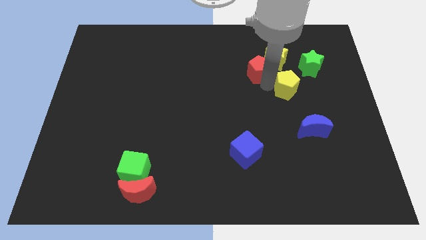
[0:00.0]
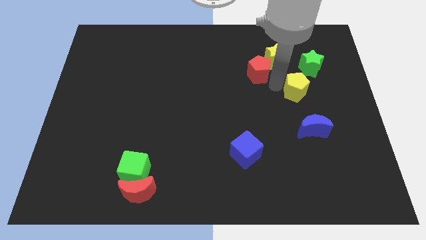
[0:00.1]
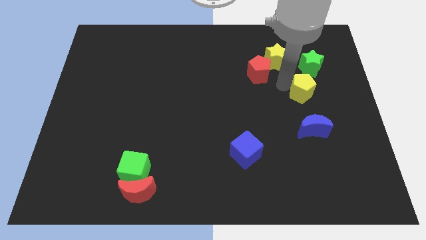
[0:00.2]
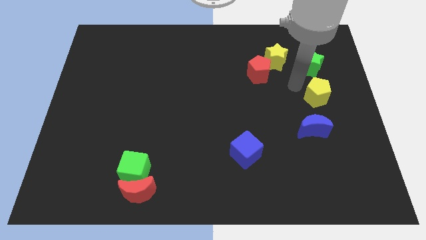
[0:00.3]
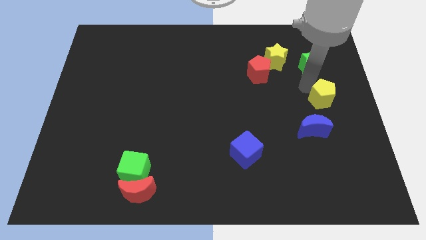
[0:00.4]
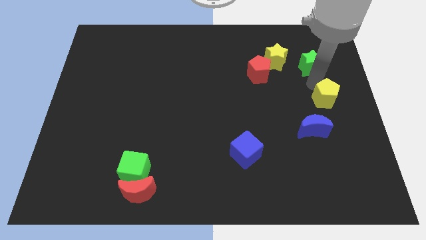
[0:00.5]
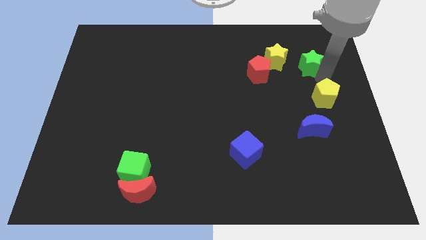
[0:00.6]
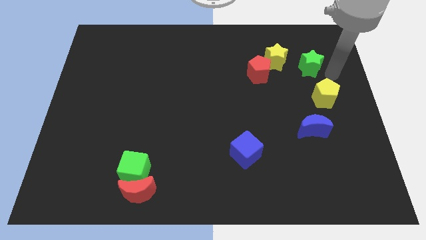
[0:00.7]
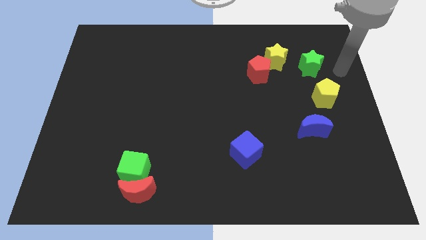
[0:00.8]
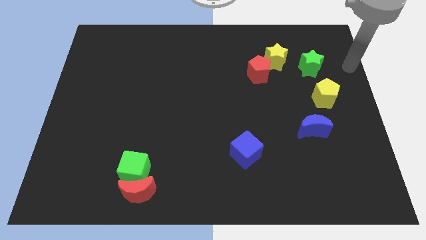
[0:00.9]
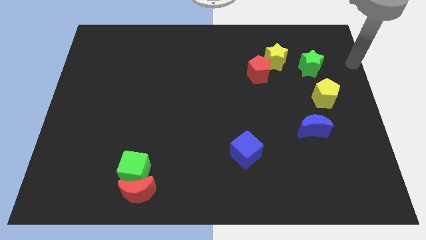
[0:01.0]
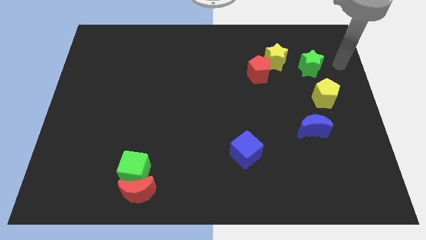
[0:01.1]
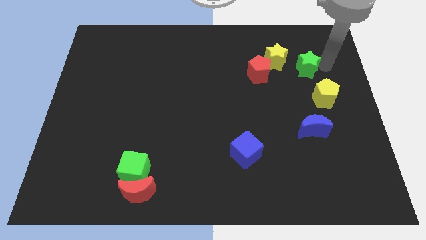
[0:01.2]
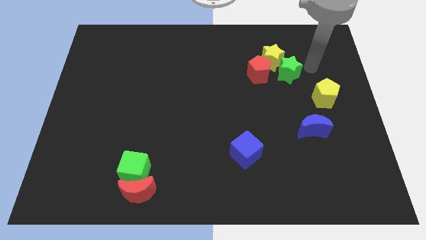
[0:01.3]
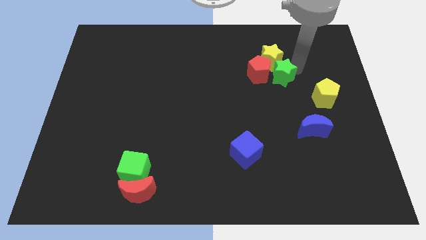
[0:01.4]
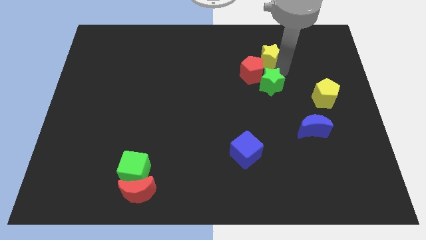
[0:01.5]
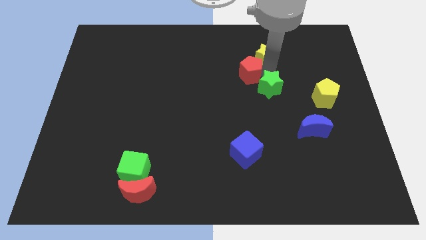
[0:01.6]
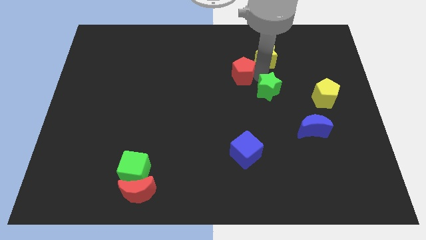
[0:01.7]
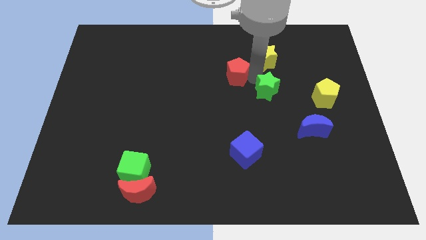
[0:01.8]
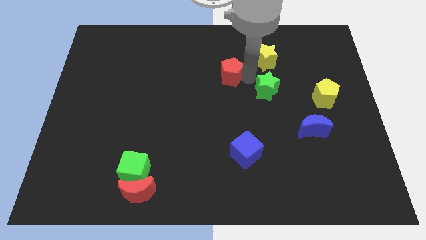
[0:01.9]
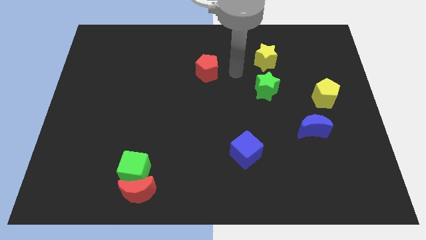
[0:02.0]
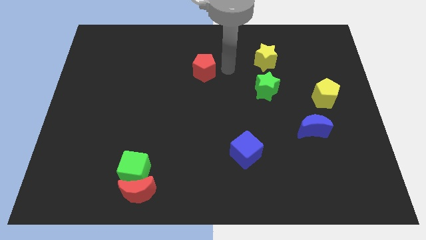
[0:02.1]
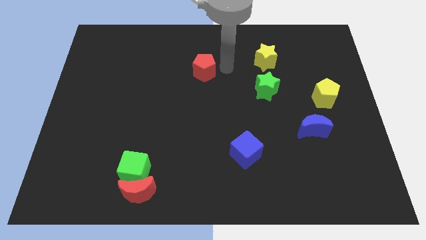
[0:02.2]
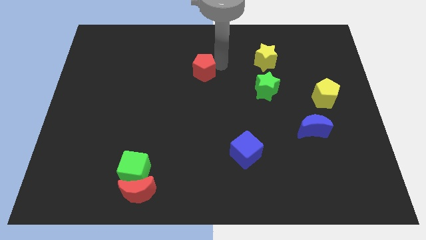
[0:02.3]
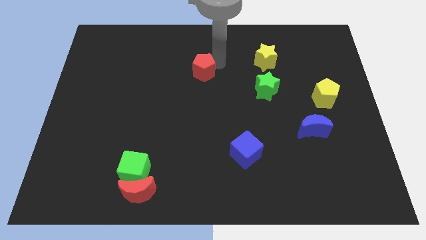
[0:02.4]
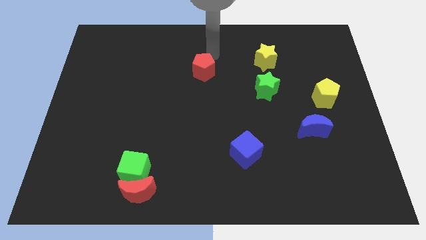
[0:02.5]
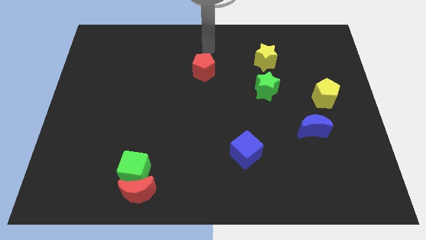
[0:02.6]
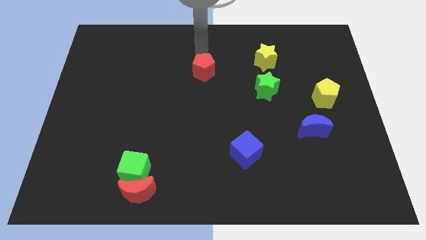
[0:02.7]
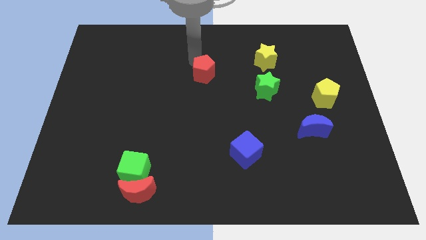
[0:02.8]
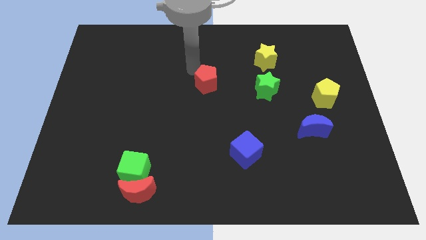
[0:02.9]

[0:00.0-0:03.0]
move red pentagon diagonal above blue cube

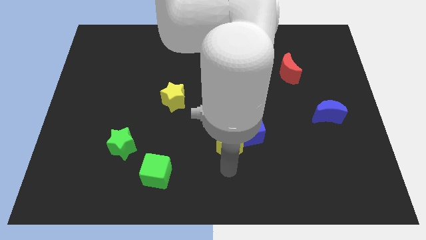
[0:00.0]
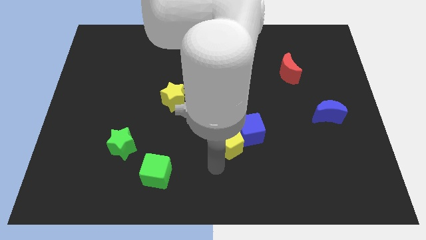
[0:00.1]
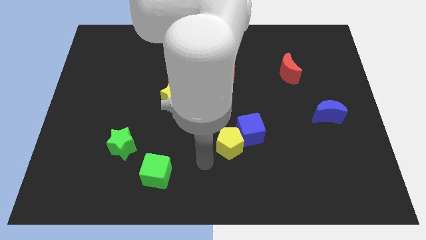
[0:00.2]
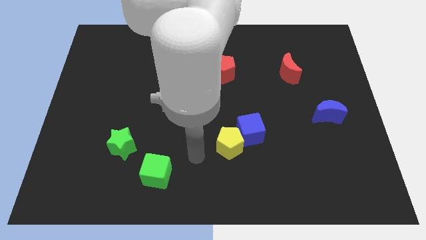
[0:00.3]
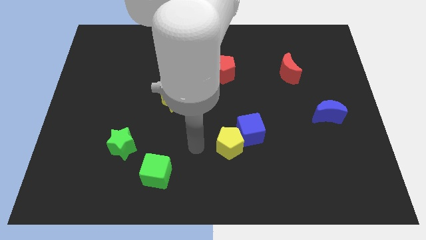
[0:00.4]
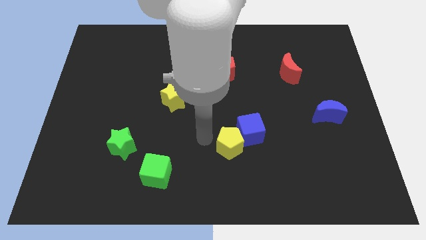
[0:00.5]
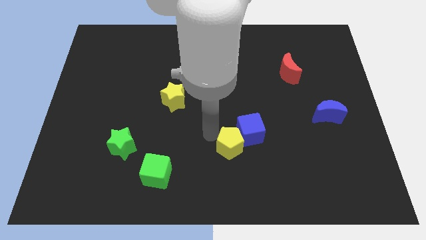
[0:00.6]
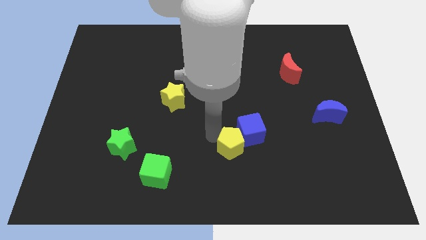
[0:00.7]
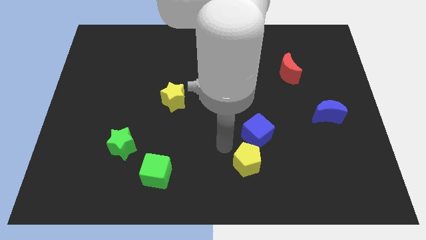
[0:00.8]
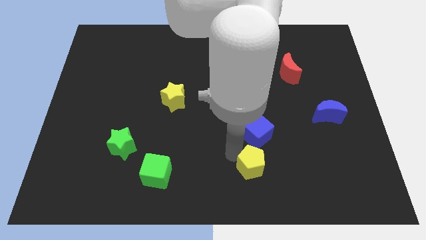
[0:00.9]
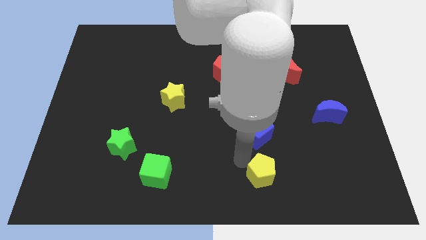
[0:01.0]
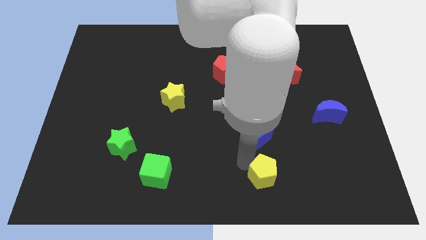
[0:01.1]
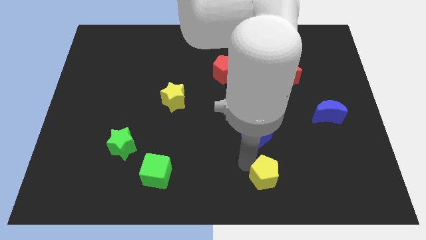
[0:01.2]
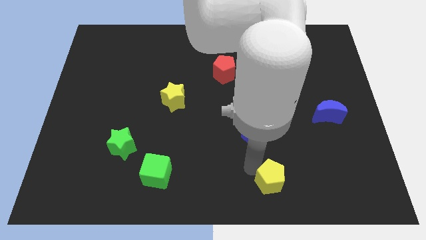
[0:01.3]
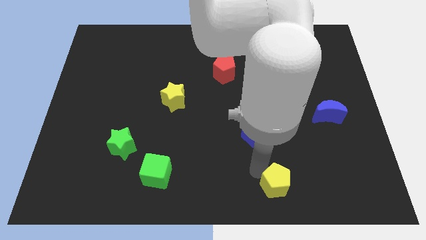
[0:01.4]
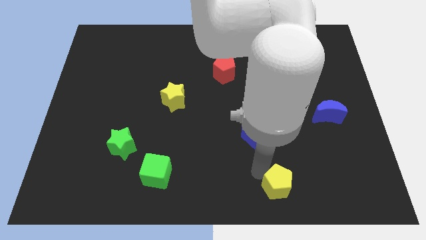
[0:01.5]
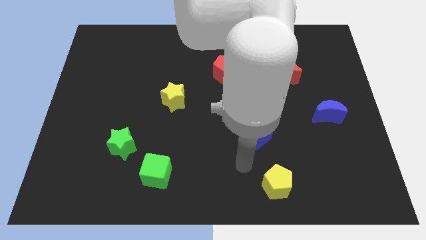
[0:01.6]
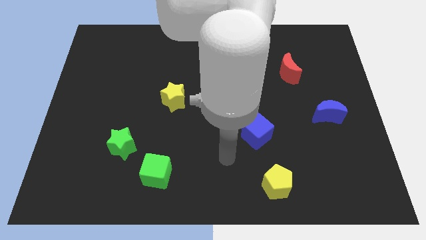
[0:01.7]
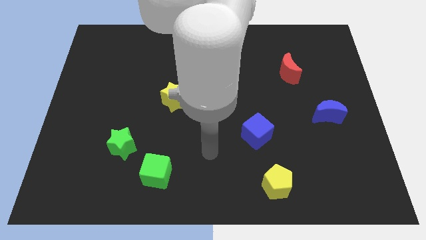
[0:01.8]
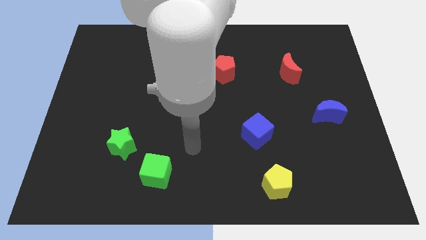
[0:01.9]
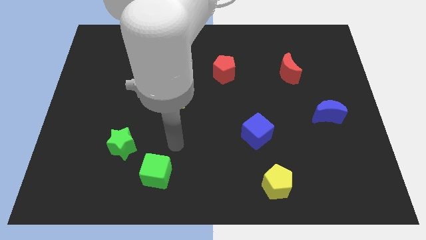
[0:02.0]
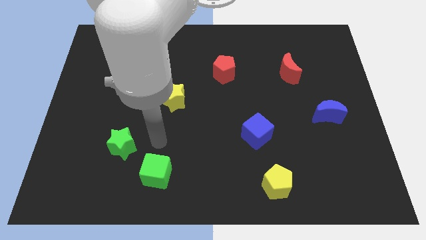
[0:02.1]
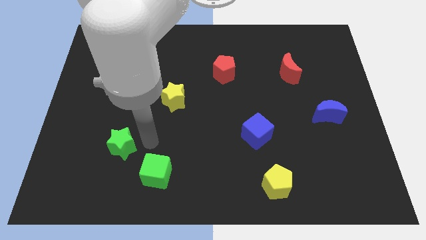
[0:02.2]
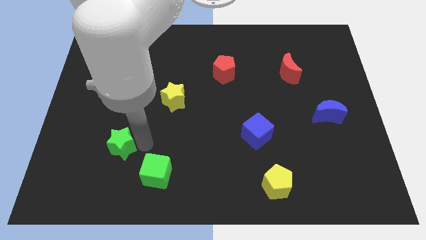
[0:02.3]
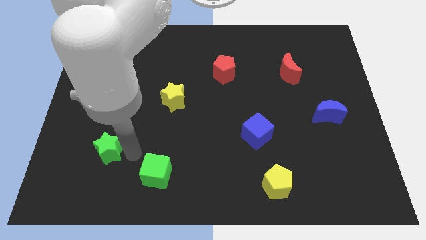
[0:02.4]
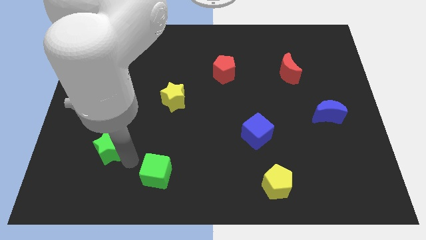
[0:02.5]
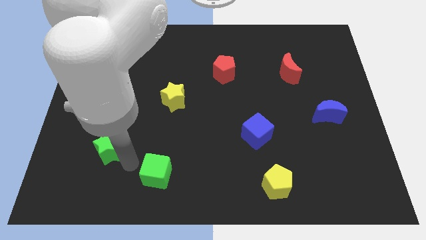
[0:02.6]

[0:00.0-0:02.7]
slightly push the green star towards the left

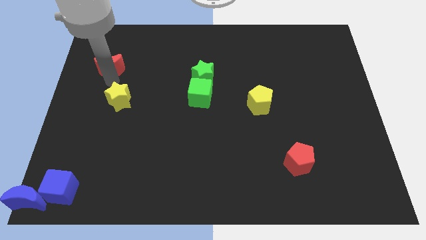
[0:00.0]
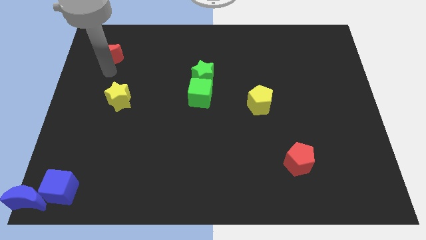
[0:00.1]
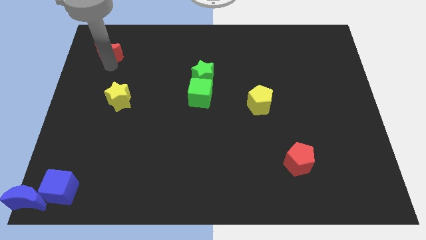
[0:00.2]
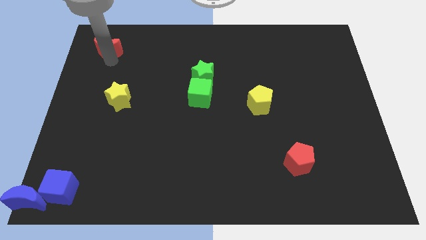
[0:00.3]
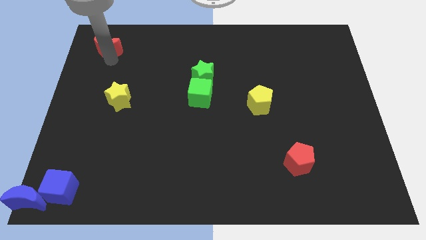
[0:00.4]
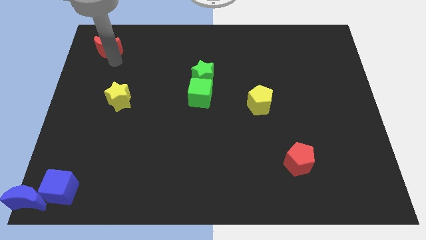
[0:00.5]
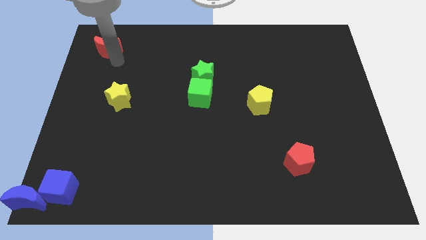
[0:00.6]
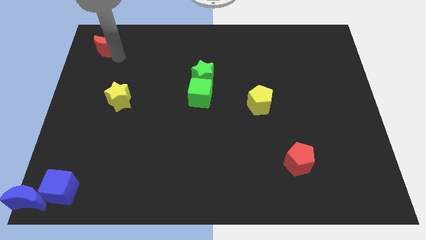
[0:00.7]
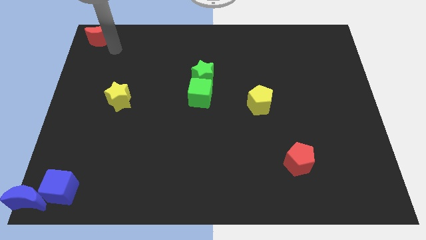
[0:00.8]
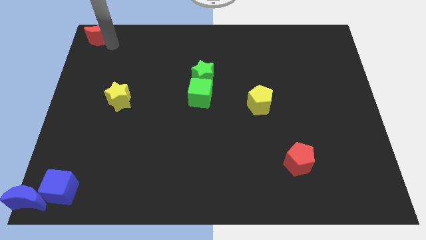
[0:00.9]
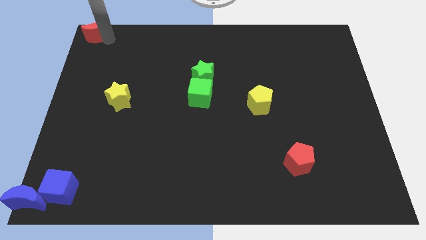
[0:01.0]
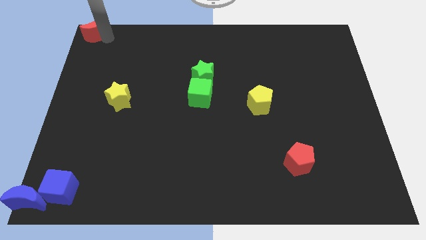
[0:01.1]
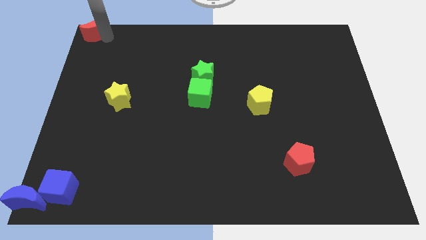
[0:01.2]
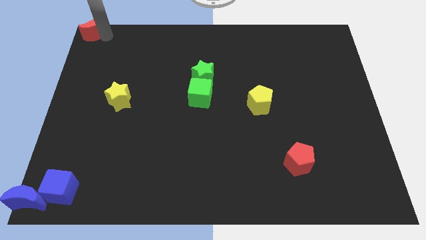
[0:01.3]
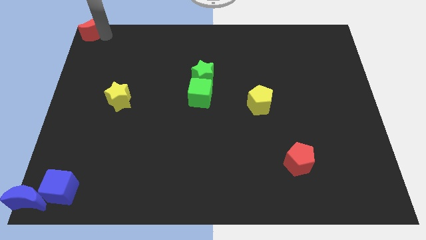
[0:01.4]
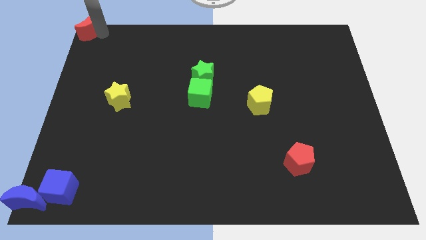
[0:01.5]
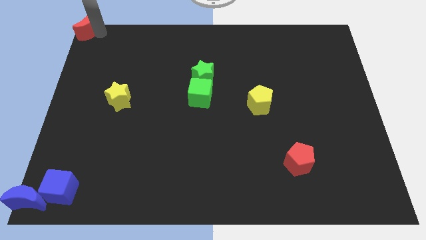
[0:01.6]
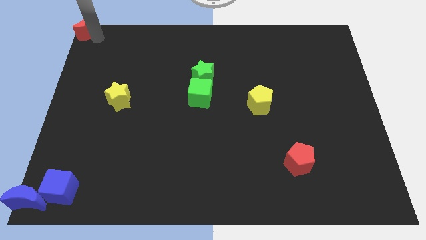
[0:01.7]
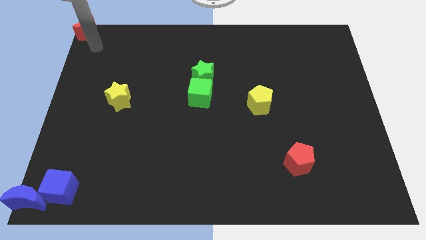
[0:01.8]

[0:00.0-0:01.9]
put the red crescent at the top left corner of the board

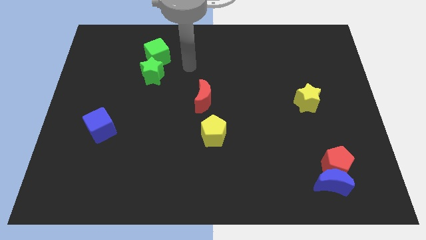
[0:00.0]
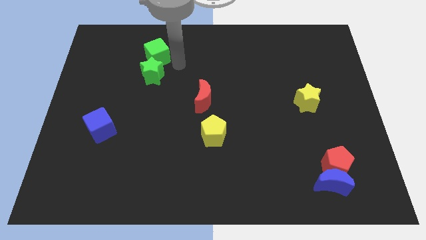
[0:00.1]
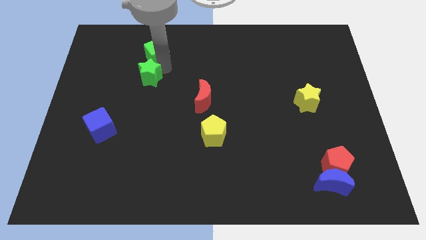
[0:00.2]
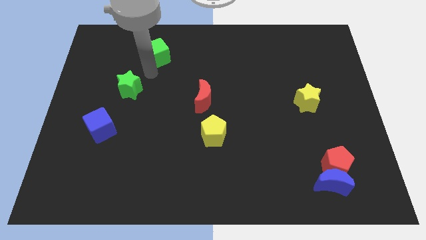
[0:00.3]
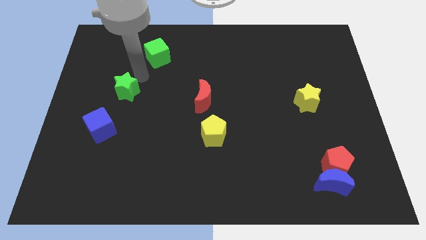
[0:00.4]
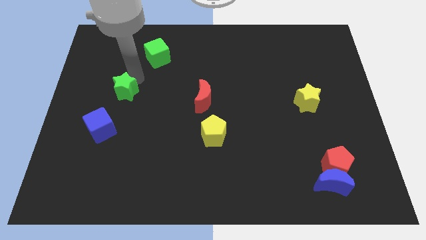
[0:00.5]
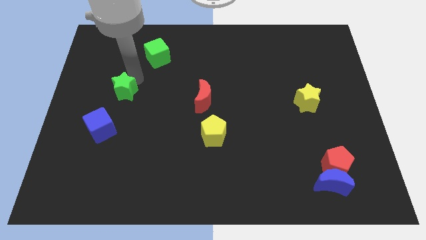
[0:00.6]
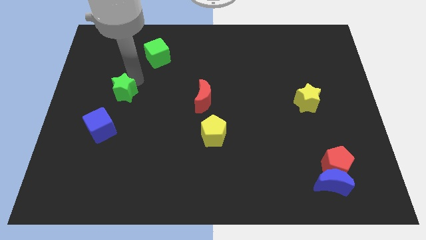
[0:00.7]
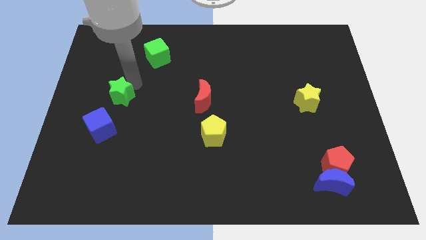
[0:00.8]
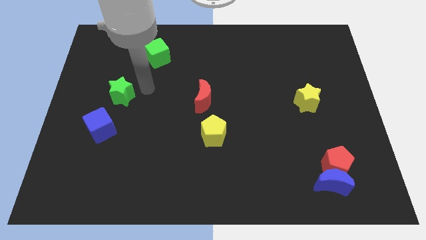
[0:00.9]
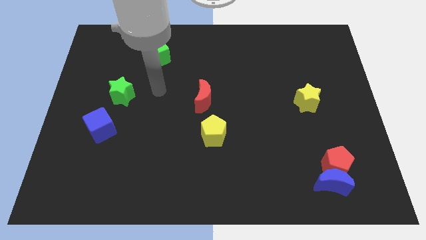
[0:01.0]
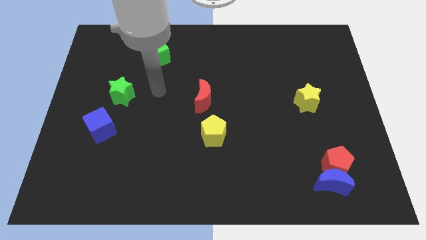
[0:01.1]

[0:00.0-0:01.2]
separate the green star from the green cube

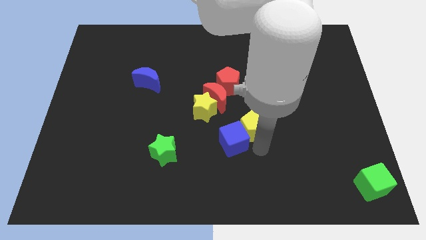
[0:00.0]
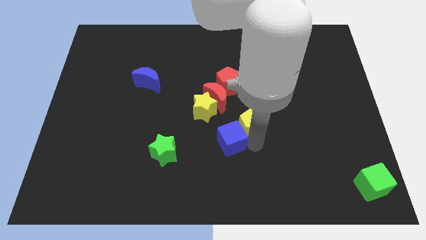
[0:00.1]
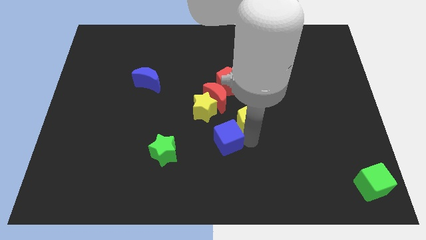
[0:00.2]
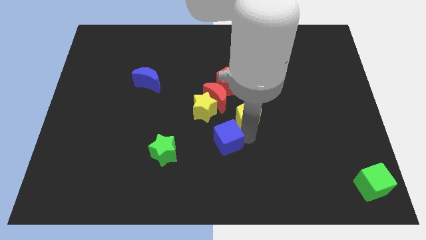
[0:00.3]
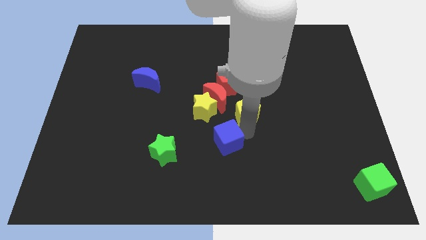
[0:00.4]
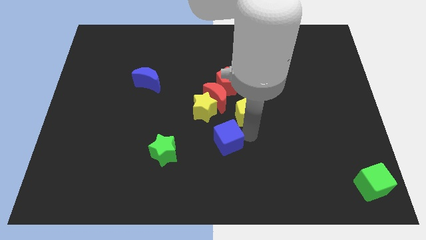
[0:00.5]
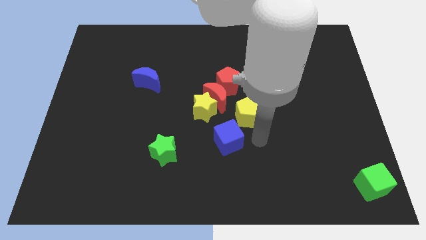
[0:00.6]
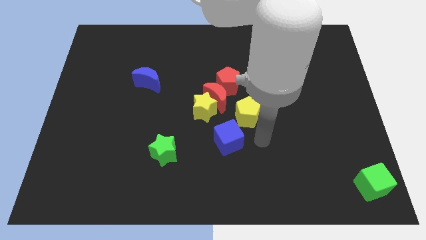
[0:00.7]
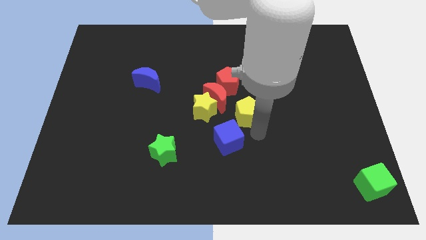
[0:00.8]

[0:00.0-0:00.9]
place the yellow pentagon parallel to yellow star
